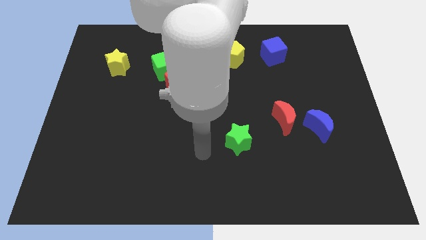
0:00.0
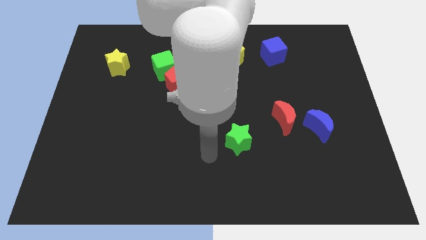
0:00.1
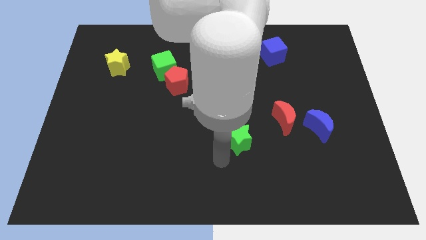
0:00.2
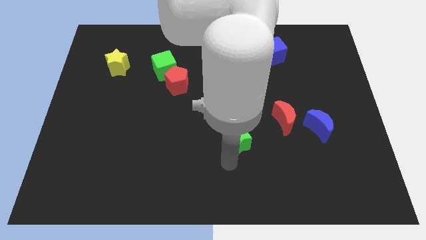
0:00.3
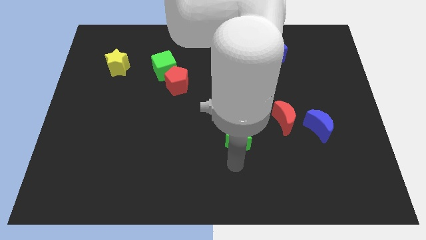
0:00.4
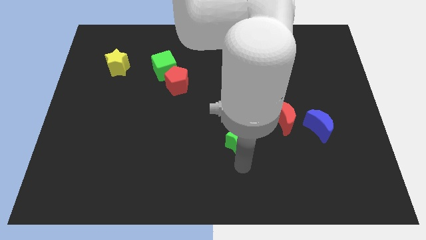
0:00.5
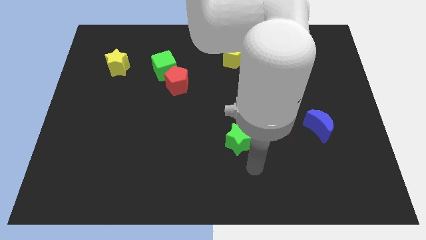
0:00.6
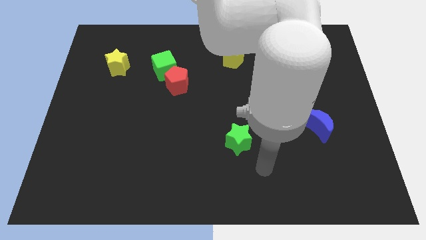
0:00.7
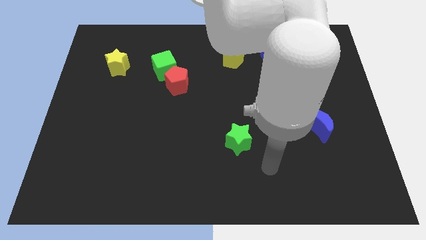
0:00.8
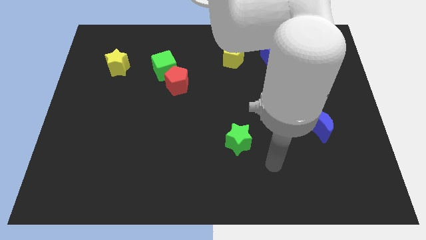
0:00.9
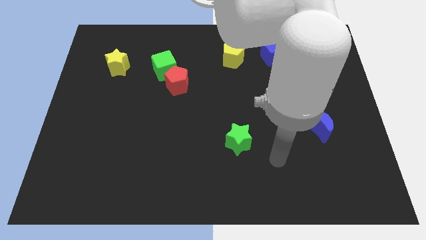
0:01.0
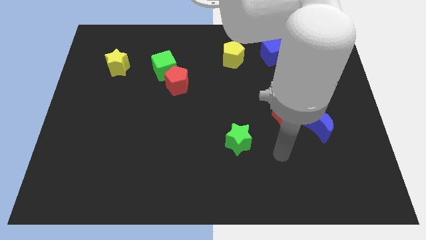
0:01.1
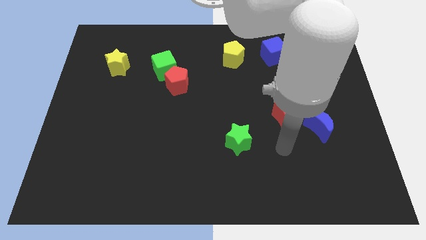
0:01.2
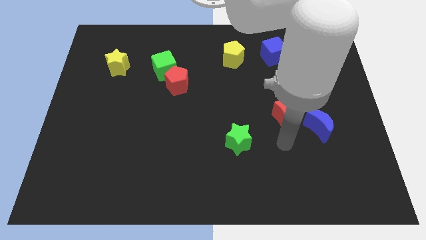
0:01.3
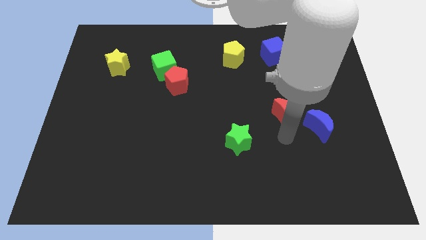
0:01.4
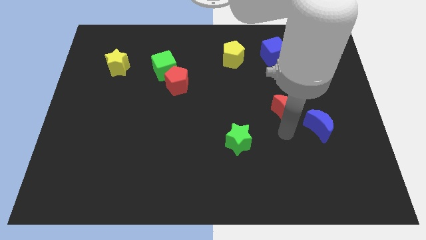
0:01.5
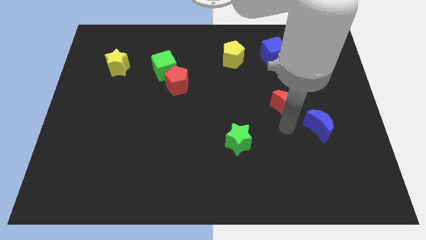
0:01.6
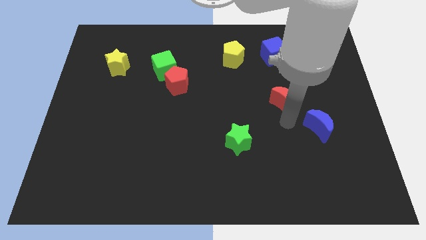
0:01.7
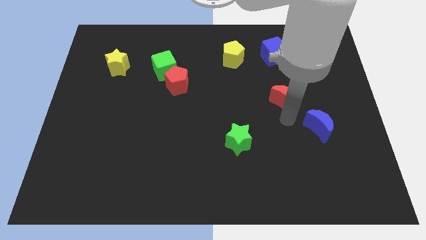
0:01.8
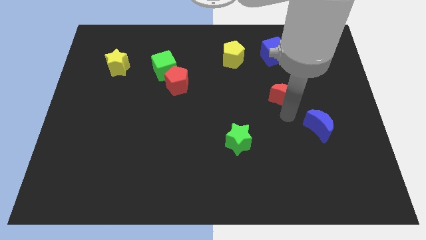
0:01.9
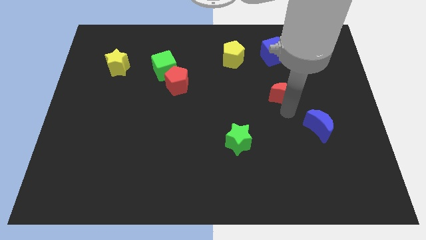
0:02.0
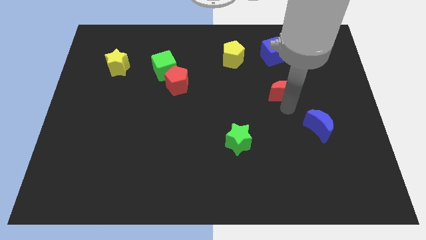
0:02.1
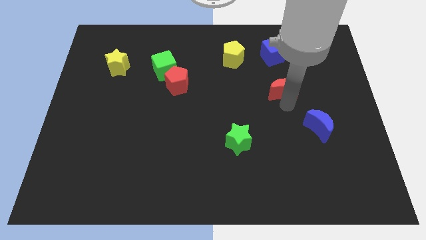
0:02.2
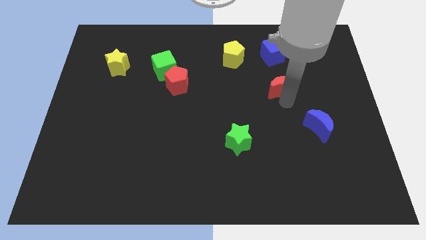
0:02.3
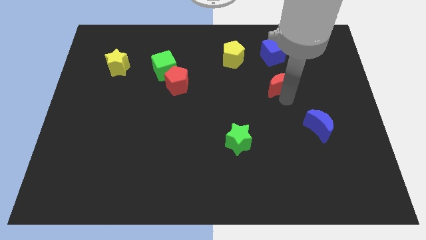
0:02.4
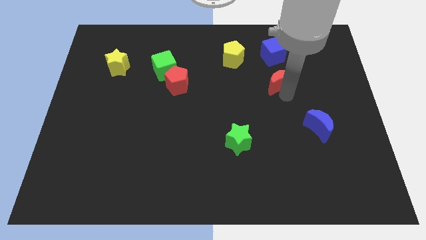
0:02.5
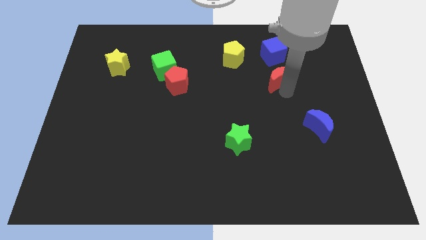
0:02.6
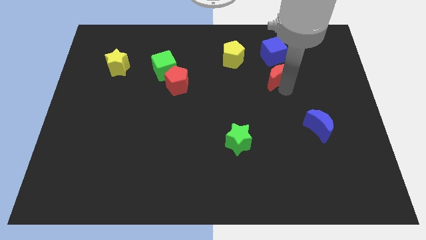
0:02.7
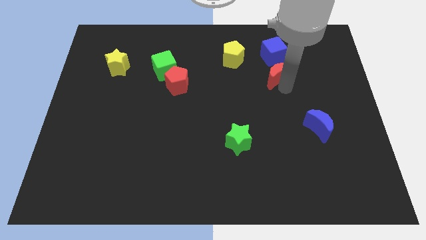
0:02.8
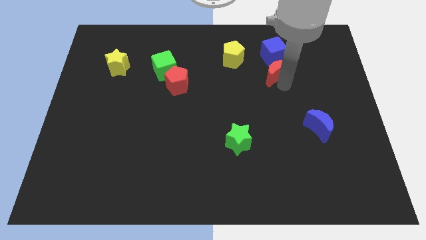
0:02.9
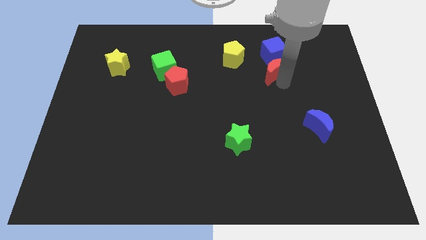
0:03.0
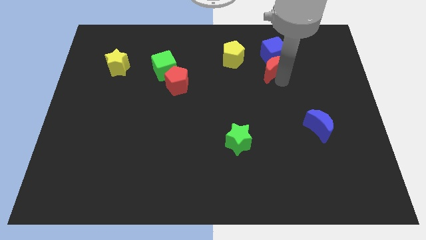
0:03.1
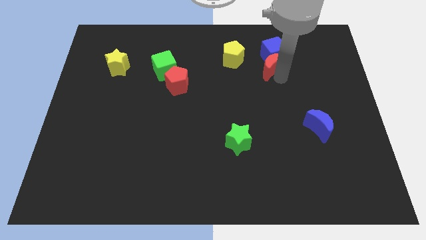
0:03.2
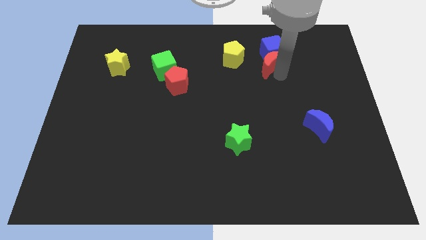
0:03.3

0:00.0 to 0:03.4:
move the red moon to the blue cube

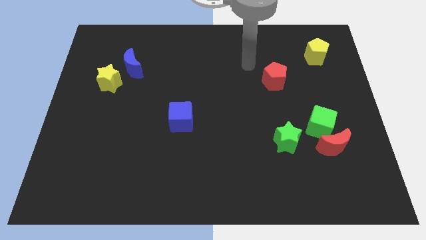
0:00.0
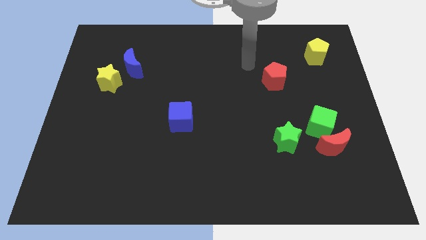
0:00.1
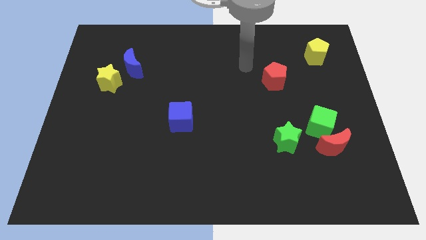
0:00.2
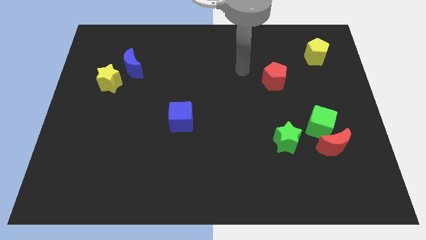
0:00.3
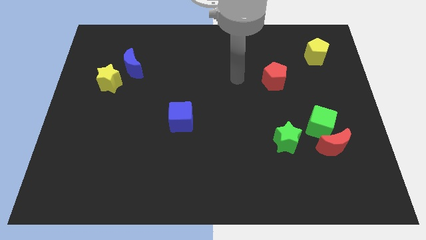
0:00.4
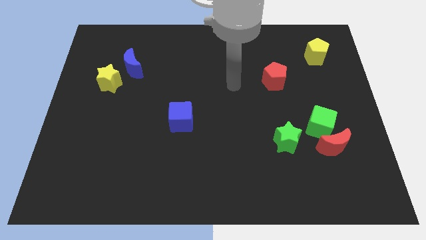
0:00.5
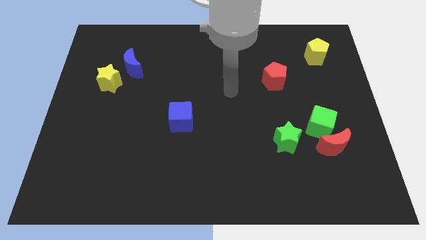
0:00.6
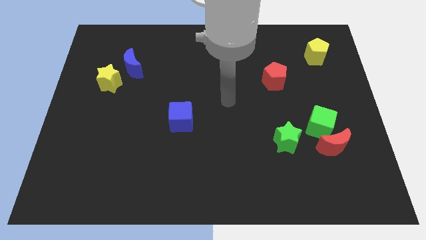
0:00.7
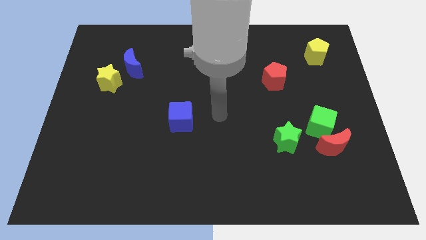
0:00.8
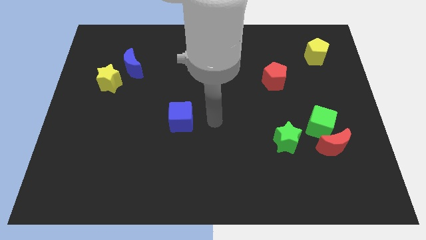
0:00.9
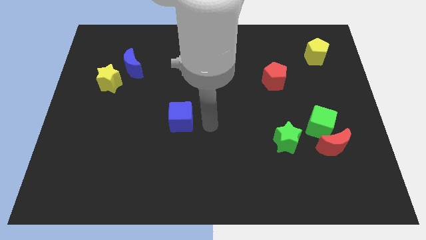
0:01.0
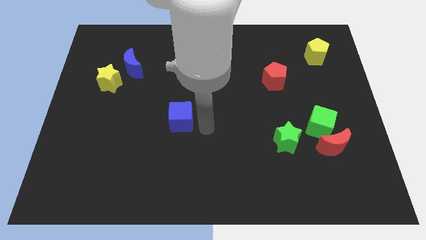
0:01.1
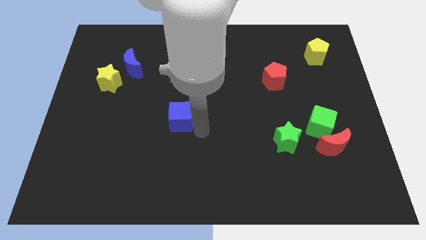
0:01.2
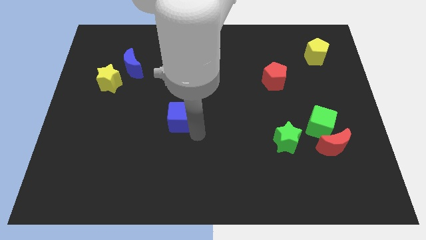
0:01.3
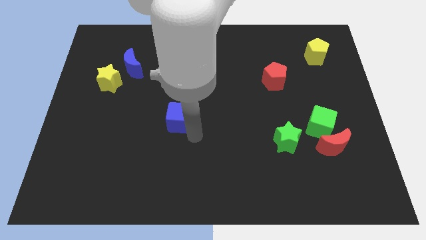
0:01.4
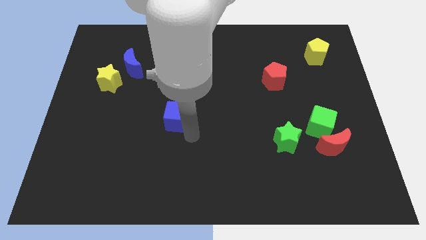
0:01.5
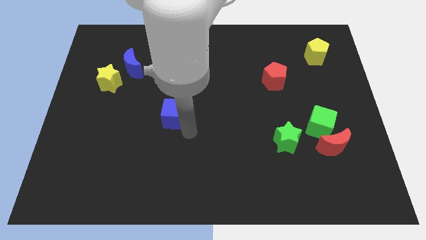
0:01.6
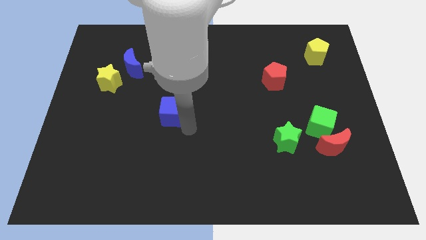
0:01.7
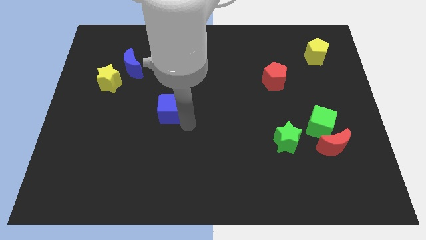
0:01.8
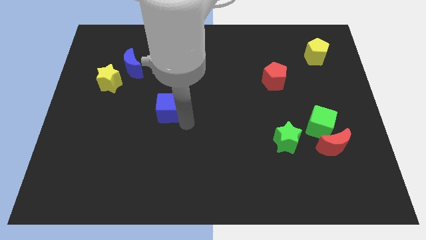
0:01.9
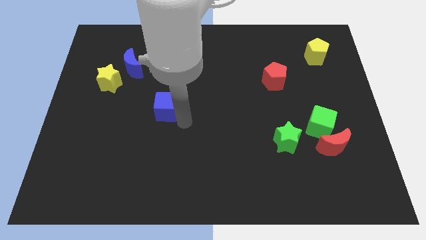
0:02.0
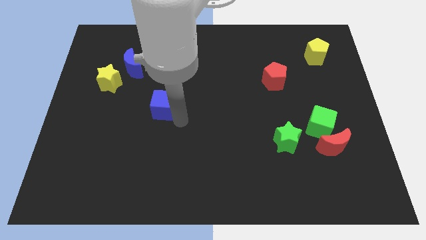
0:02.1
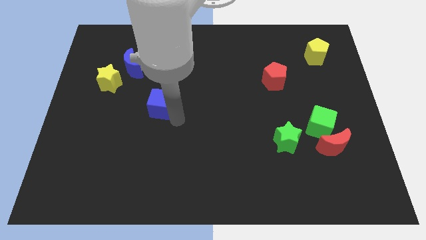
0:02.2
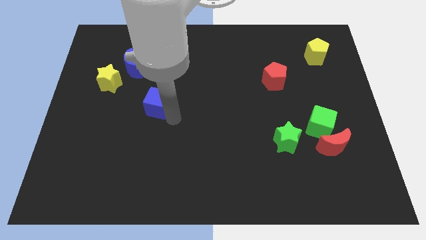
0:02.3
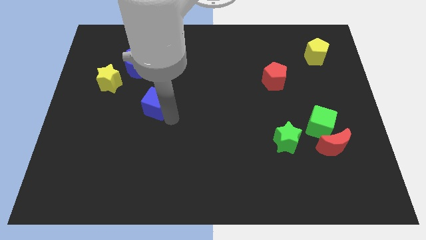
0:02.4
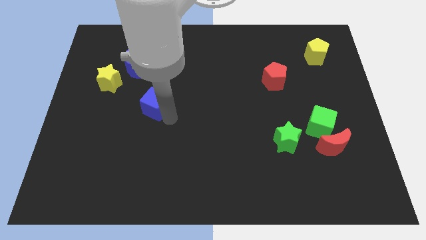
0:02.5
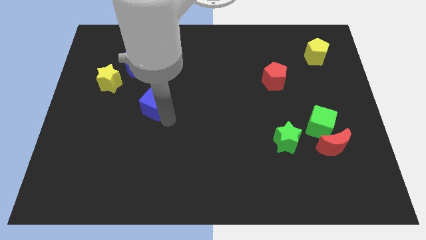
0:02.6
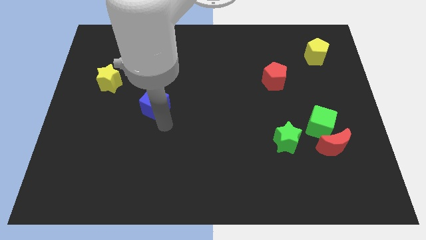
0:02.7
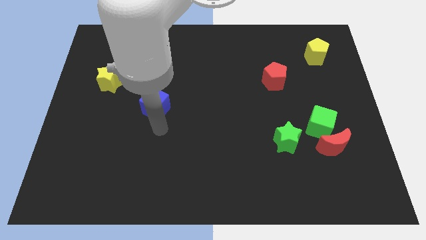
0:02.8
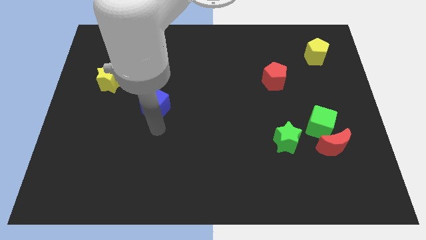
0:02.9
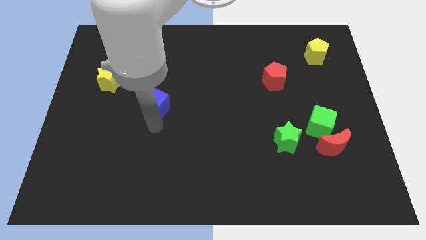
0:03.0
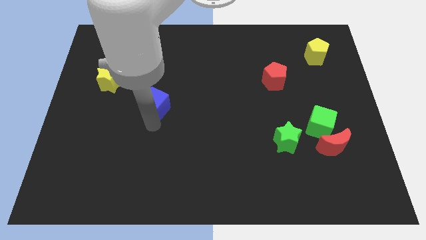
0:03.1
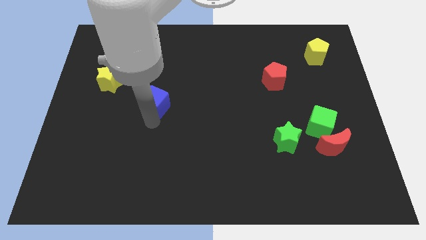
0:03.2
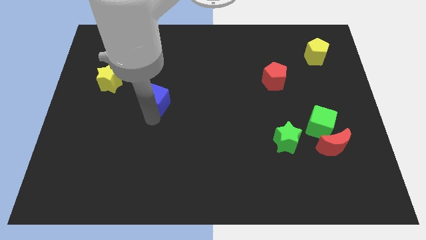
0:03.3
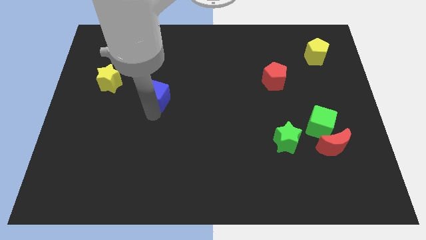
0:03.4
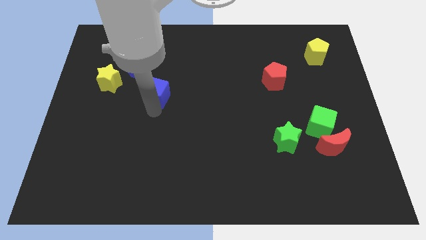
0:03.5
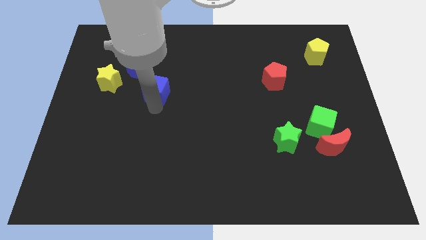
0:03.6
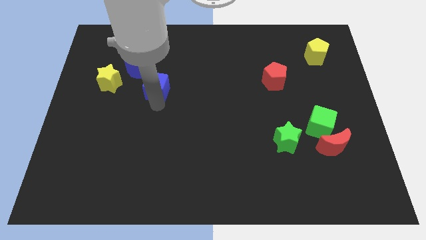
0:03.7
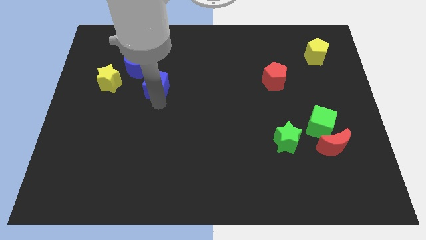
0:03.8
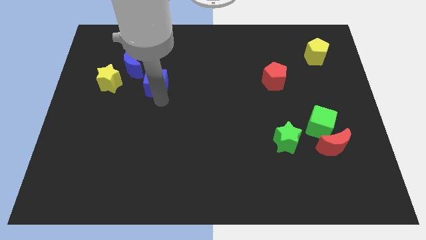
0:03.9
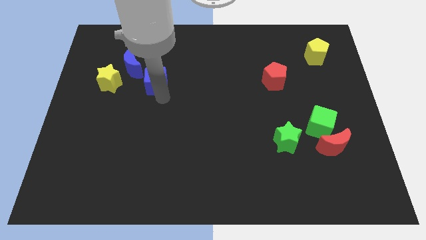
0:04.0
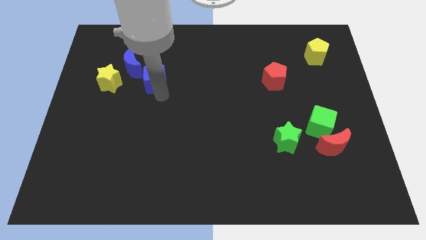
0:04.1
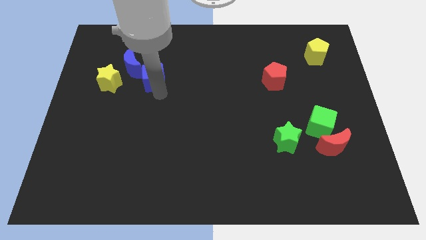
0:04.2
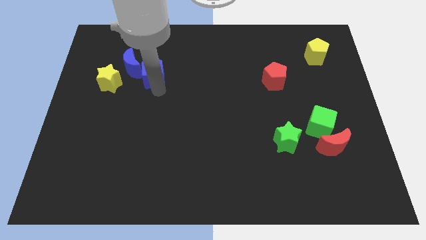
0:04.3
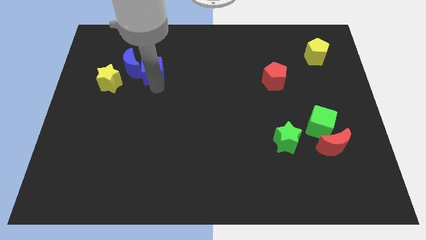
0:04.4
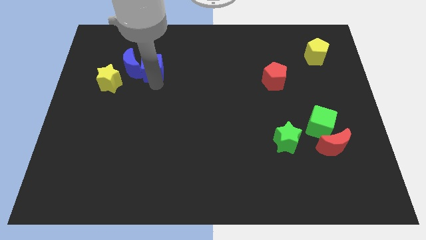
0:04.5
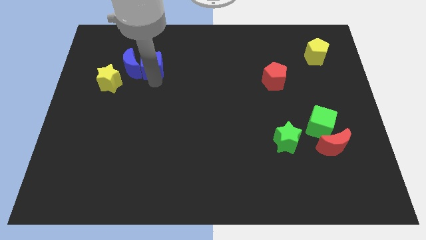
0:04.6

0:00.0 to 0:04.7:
put the blue cube next to the blue moon

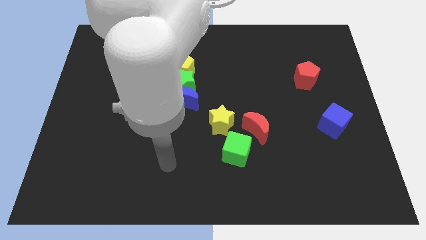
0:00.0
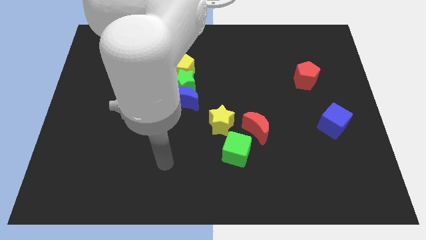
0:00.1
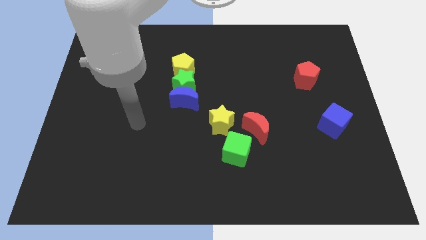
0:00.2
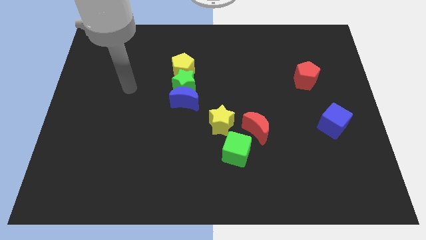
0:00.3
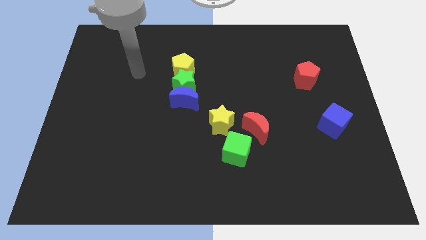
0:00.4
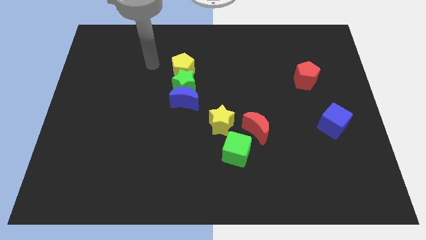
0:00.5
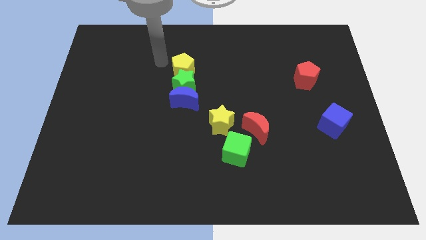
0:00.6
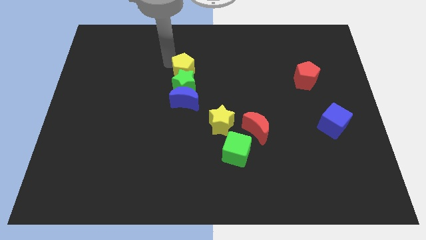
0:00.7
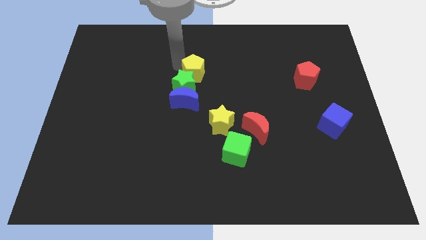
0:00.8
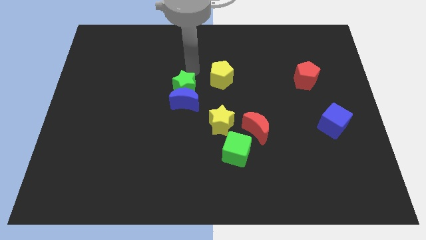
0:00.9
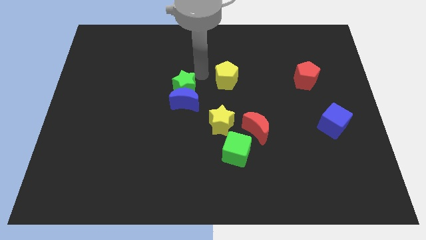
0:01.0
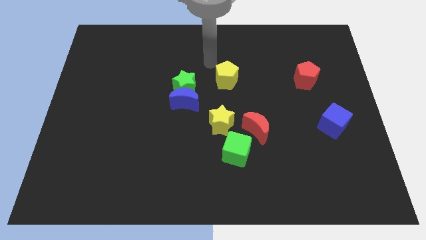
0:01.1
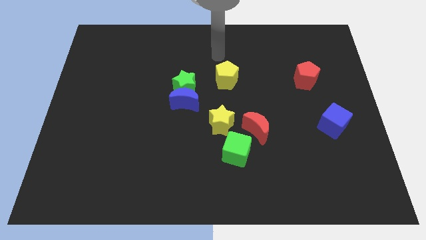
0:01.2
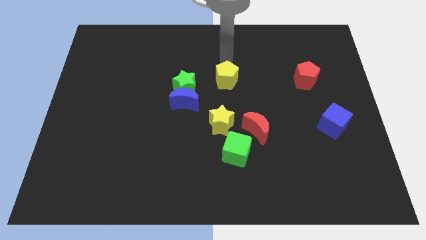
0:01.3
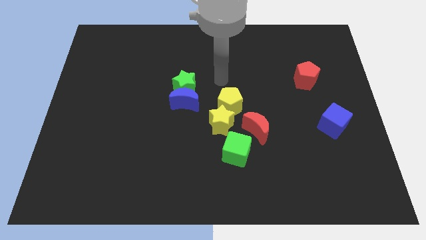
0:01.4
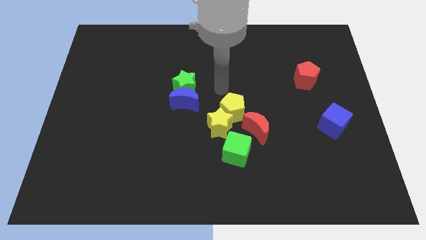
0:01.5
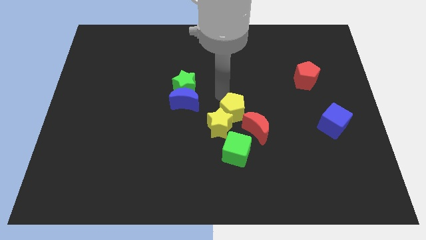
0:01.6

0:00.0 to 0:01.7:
put the yellow pentagon next to the yellow star
